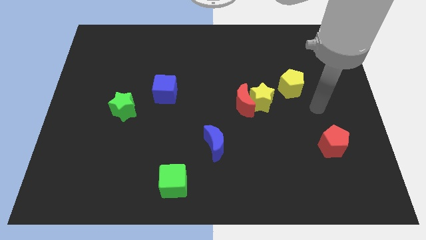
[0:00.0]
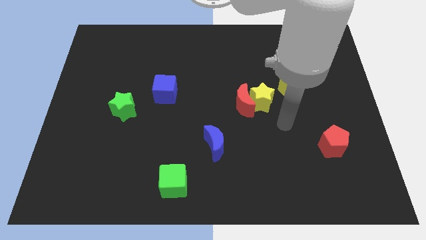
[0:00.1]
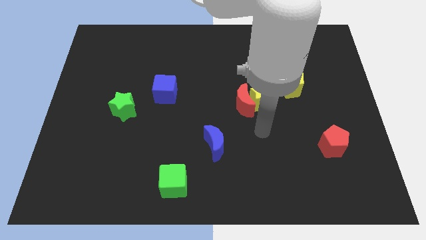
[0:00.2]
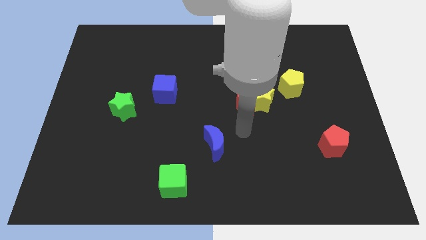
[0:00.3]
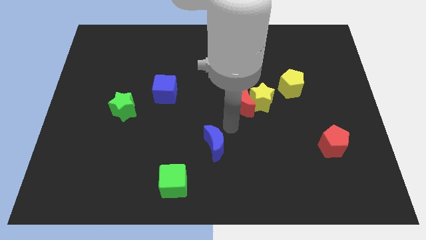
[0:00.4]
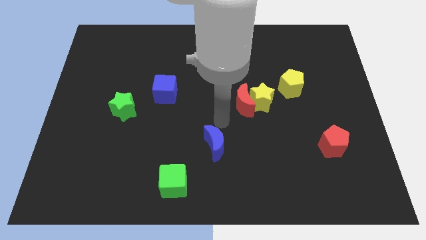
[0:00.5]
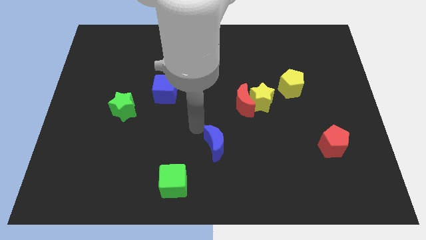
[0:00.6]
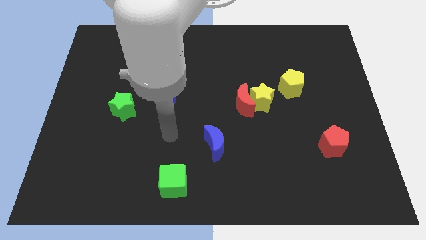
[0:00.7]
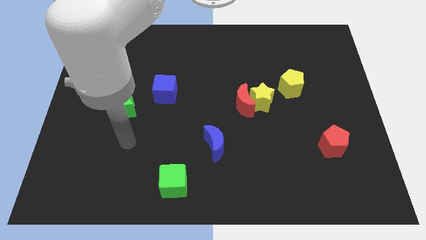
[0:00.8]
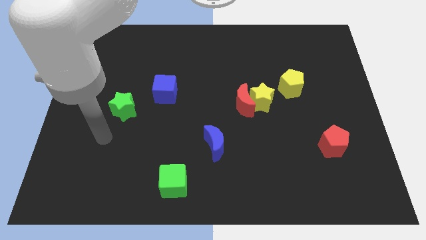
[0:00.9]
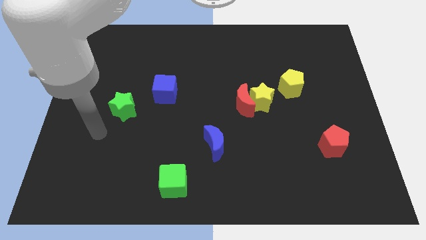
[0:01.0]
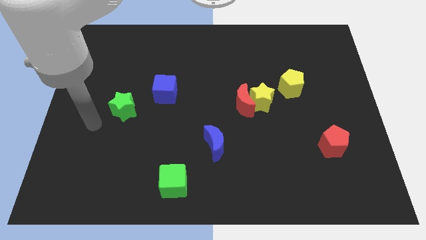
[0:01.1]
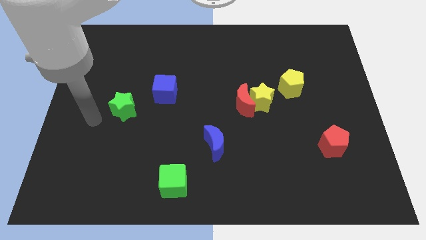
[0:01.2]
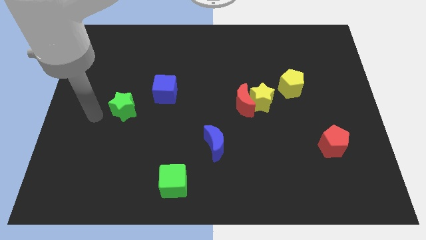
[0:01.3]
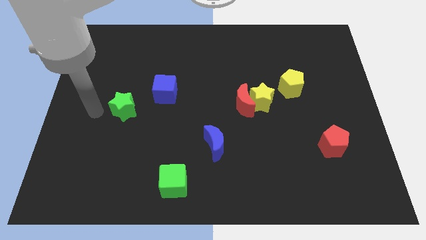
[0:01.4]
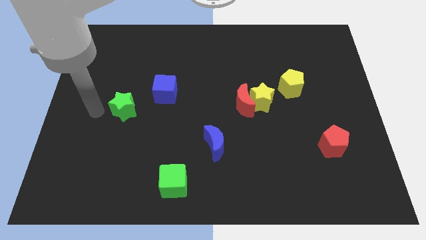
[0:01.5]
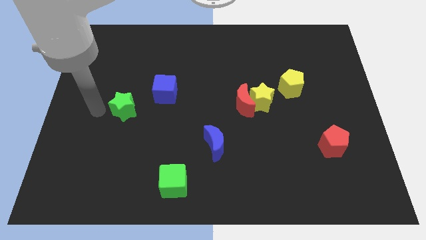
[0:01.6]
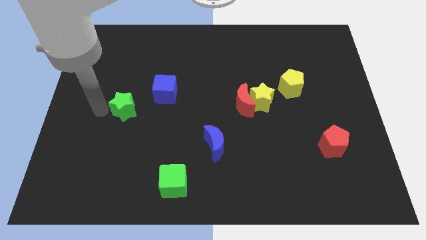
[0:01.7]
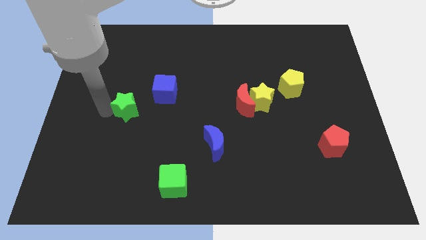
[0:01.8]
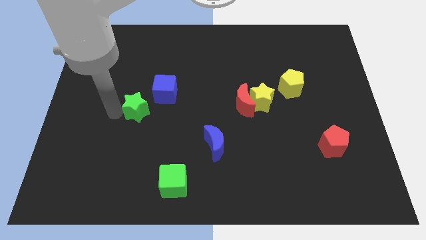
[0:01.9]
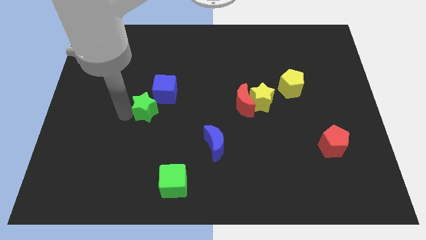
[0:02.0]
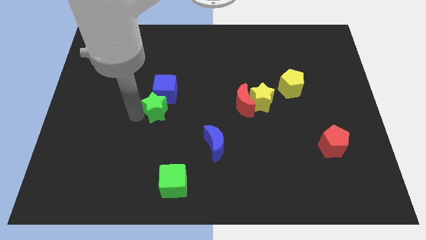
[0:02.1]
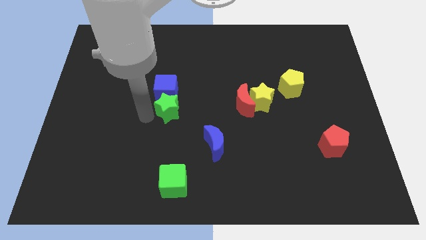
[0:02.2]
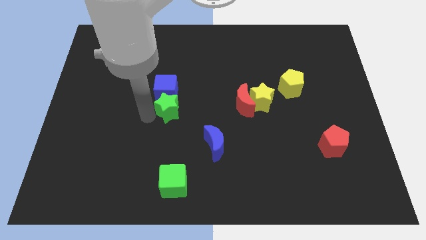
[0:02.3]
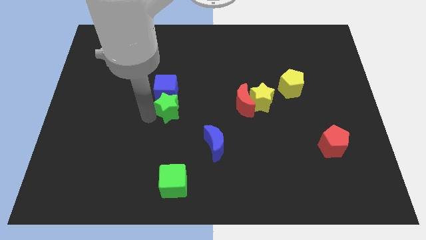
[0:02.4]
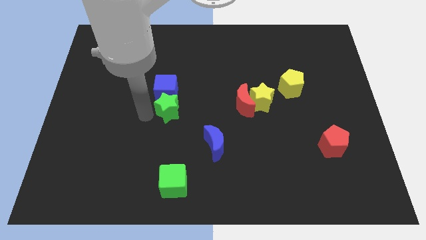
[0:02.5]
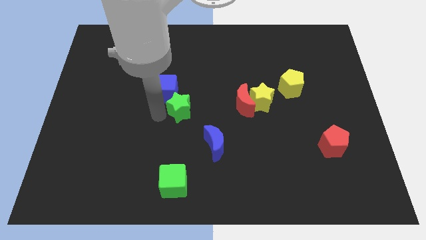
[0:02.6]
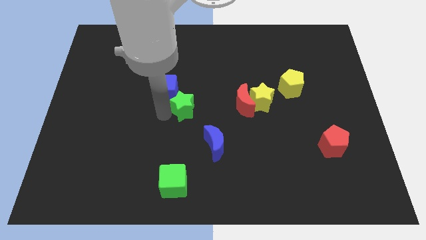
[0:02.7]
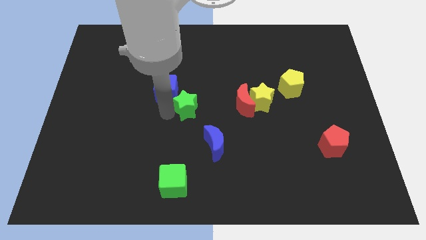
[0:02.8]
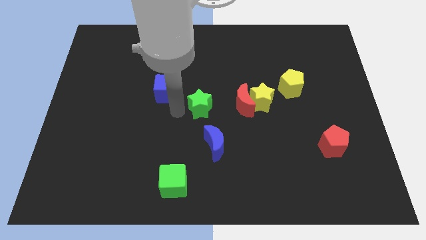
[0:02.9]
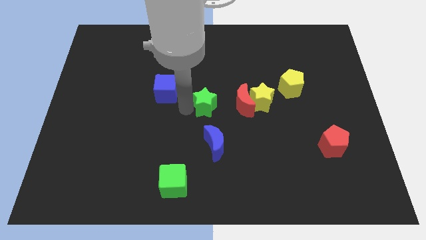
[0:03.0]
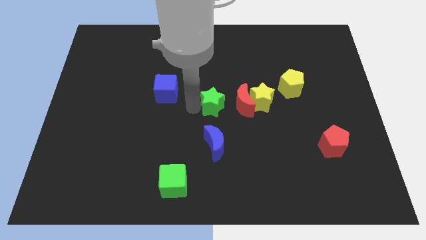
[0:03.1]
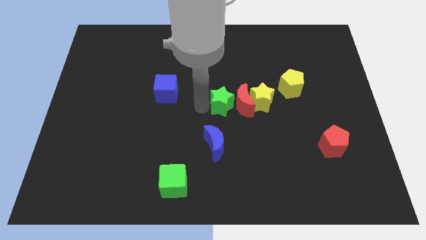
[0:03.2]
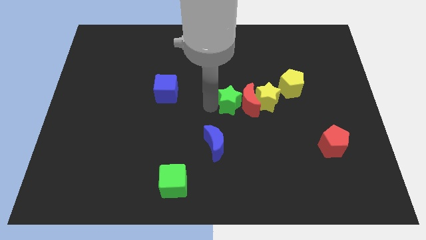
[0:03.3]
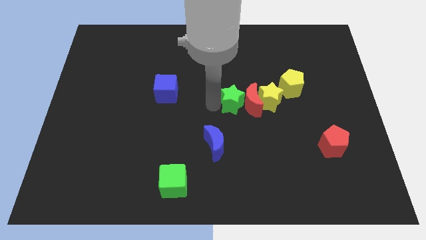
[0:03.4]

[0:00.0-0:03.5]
slide the green star to the red moon

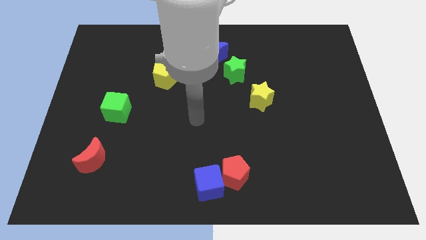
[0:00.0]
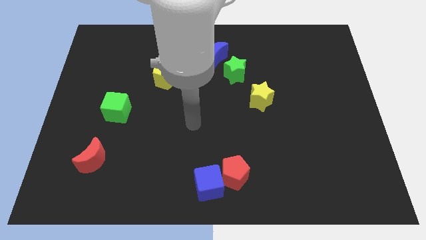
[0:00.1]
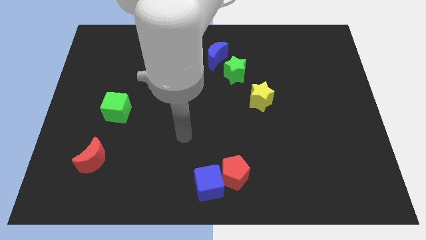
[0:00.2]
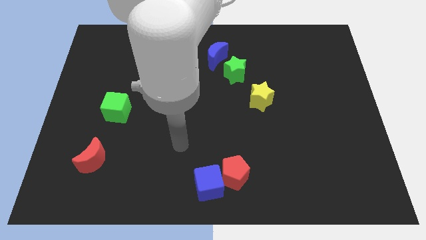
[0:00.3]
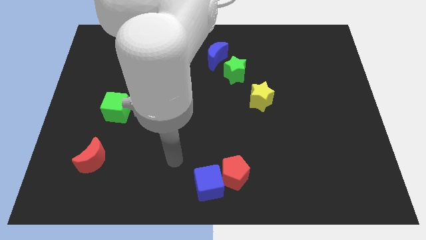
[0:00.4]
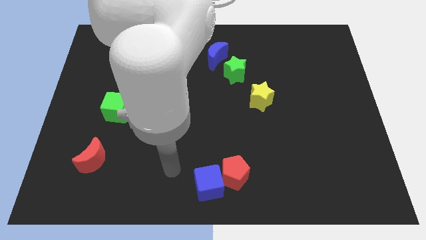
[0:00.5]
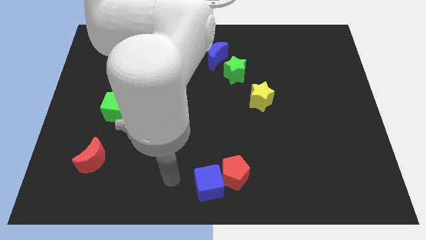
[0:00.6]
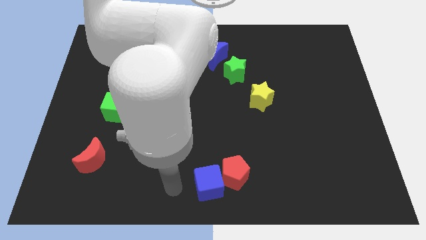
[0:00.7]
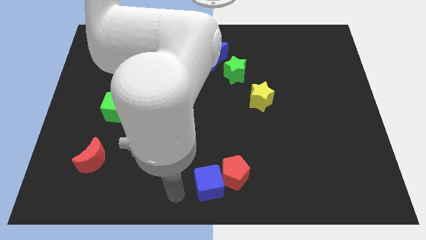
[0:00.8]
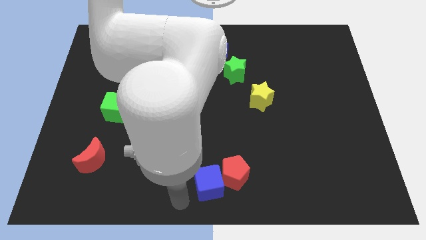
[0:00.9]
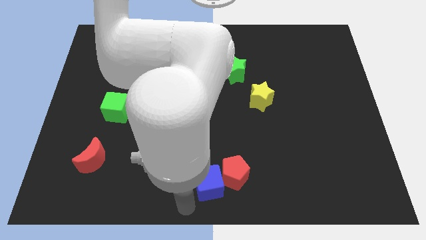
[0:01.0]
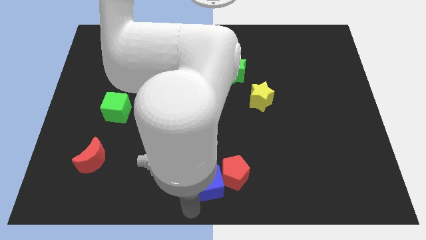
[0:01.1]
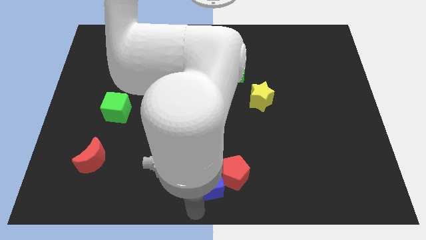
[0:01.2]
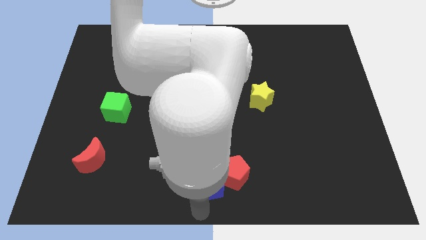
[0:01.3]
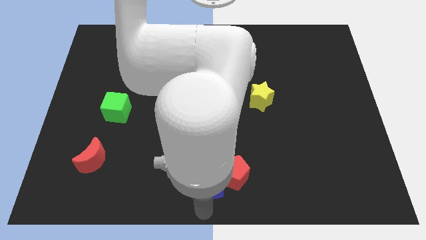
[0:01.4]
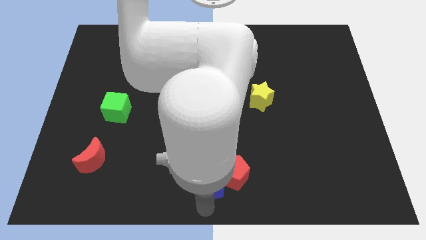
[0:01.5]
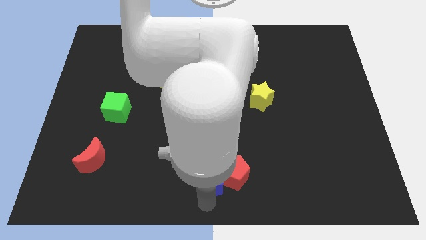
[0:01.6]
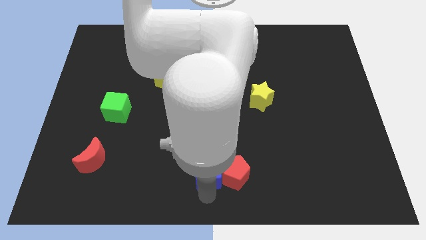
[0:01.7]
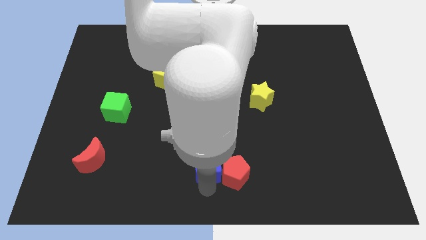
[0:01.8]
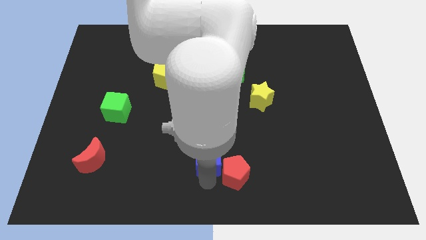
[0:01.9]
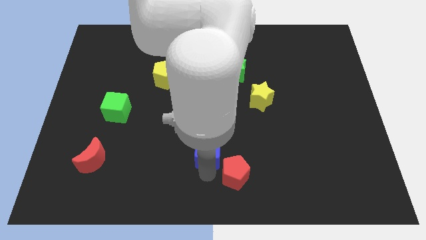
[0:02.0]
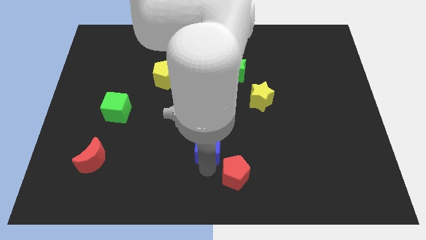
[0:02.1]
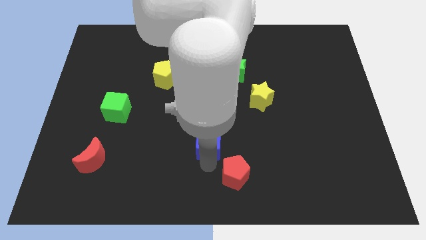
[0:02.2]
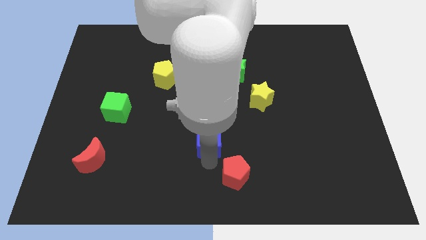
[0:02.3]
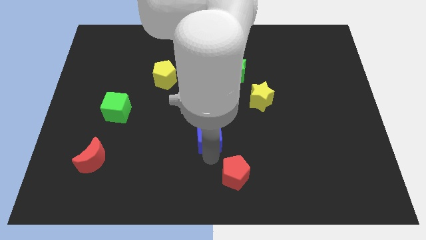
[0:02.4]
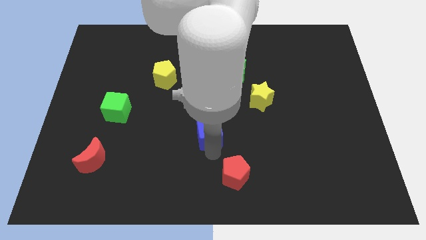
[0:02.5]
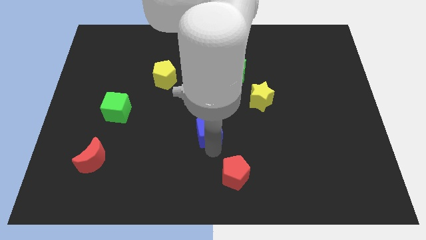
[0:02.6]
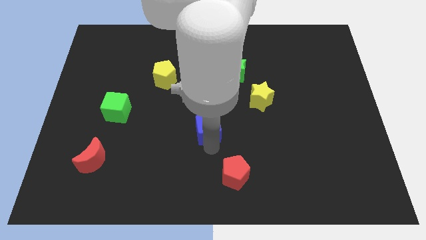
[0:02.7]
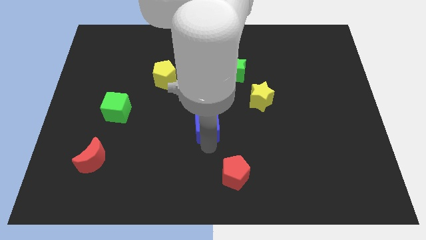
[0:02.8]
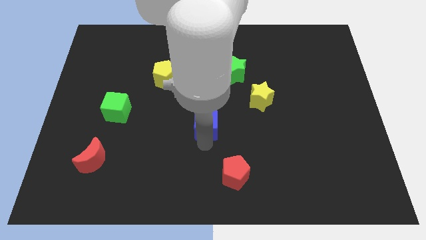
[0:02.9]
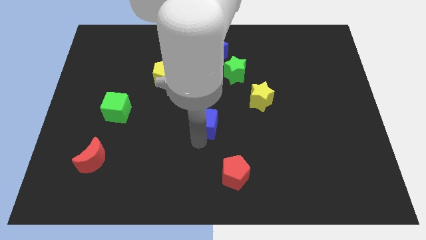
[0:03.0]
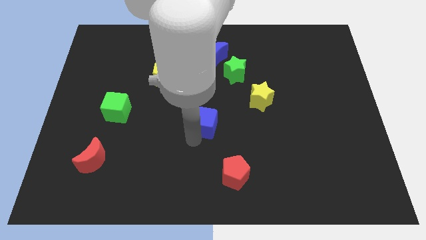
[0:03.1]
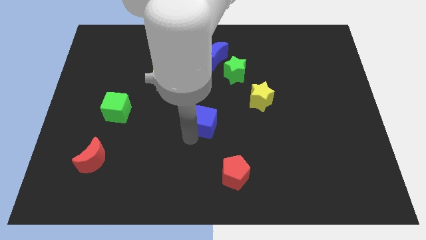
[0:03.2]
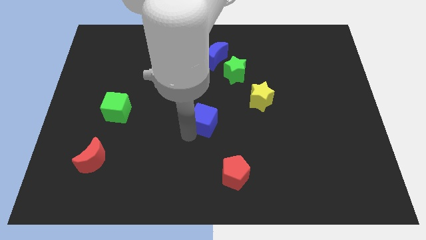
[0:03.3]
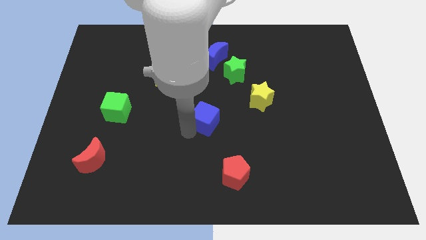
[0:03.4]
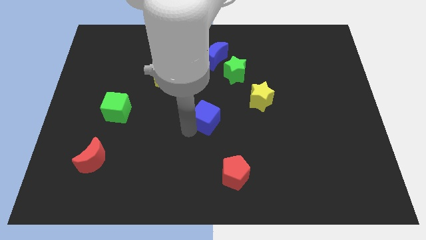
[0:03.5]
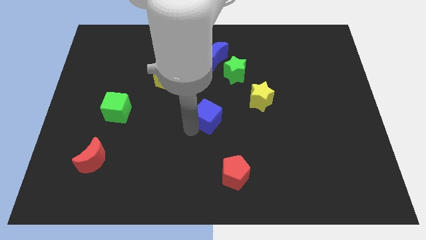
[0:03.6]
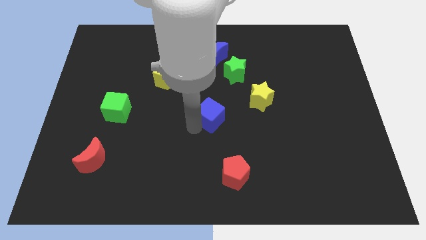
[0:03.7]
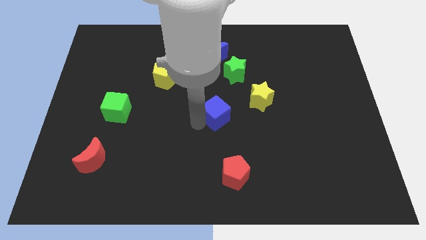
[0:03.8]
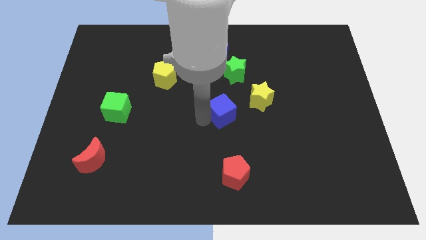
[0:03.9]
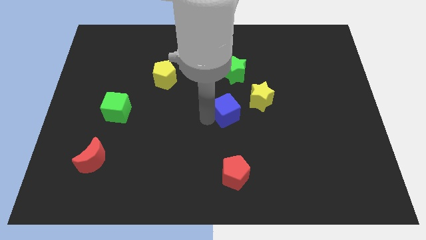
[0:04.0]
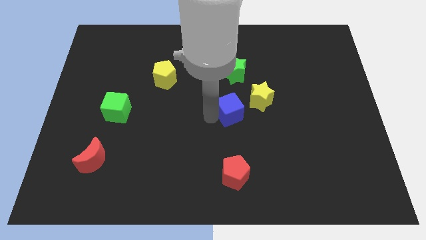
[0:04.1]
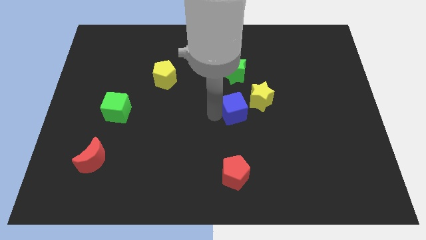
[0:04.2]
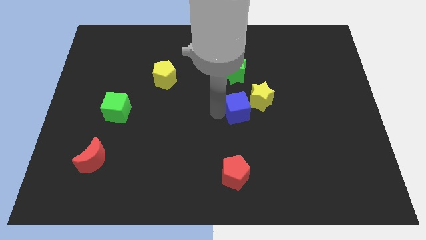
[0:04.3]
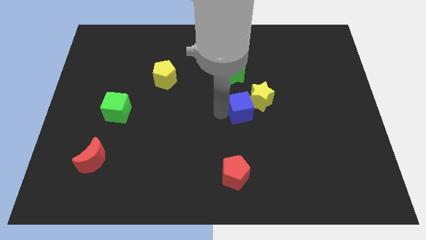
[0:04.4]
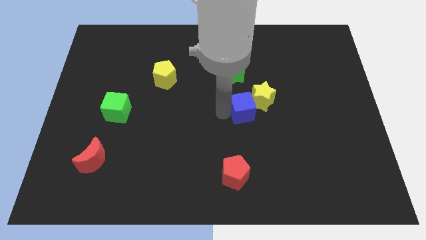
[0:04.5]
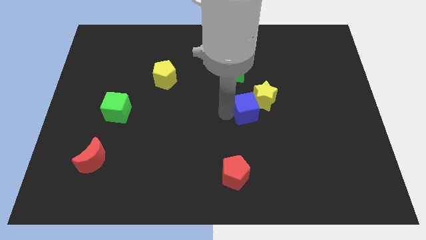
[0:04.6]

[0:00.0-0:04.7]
slide the blue cube next to the yellow star
